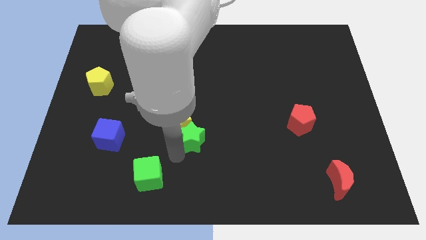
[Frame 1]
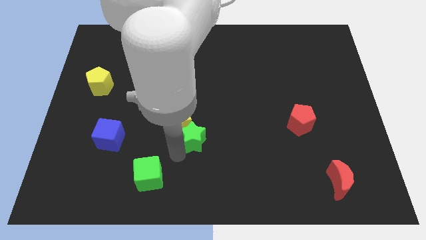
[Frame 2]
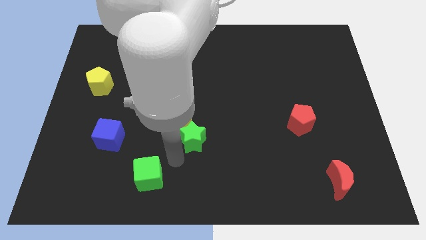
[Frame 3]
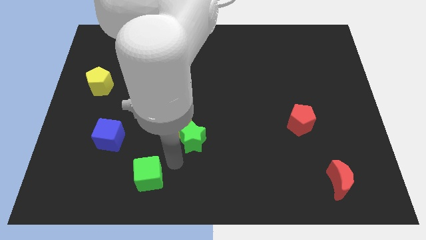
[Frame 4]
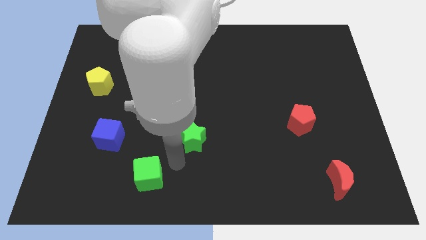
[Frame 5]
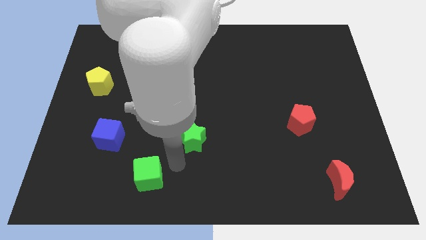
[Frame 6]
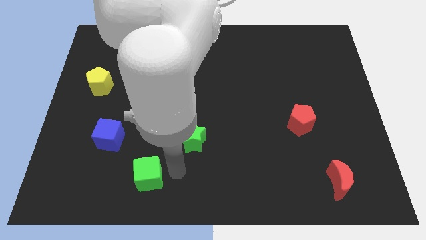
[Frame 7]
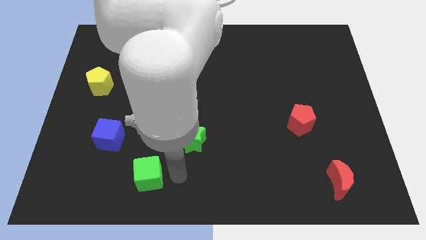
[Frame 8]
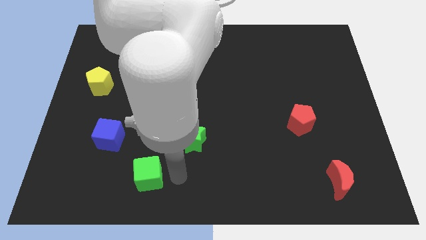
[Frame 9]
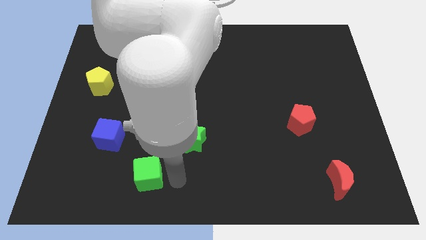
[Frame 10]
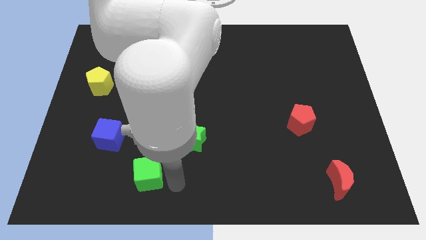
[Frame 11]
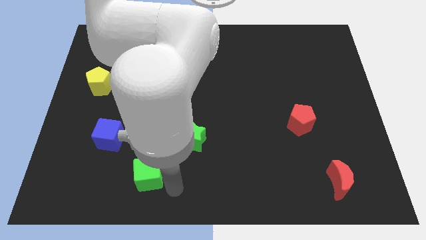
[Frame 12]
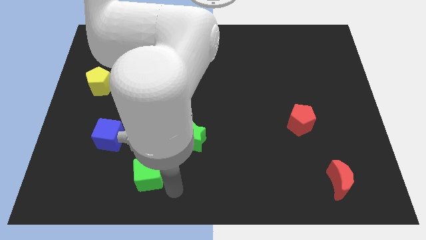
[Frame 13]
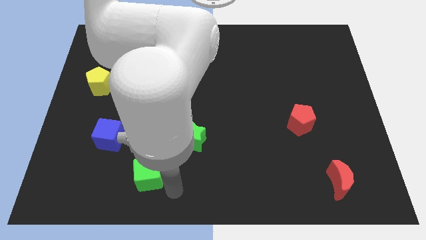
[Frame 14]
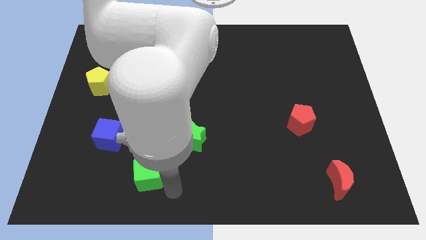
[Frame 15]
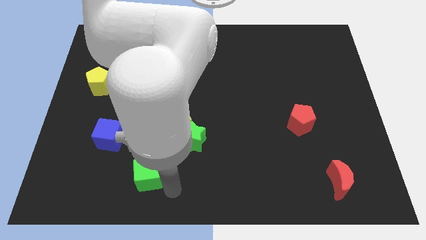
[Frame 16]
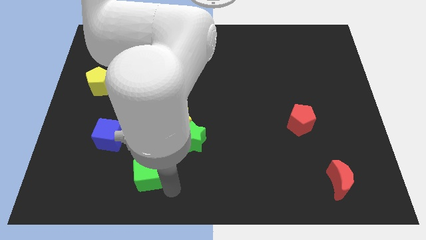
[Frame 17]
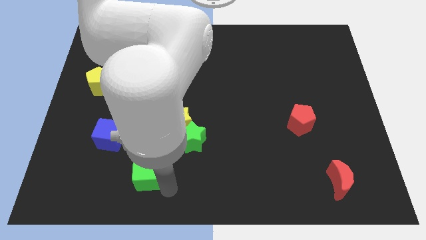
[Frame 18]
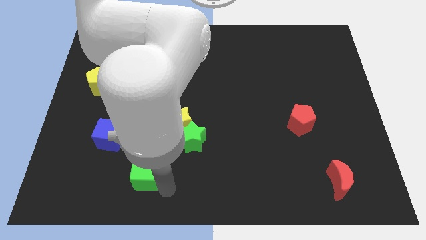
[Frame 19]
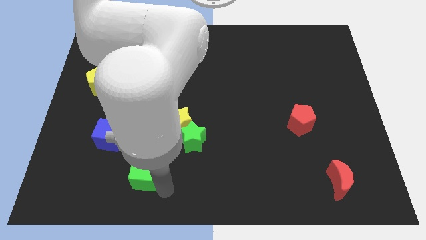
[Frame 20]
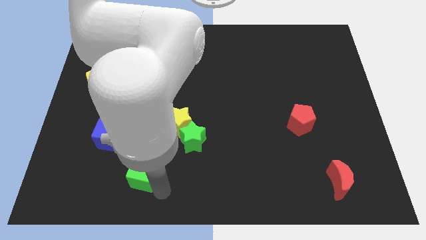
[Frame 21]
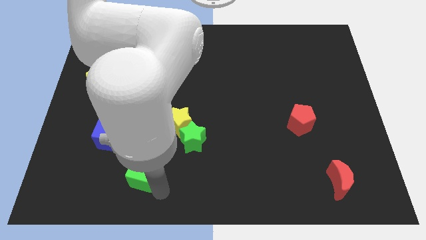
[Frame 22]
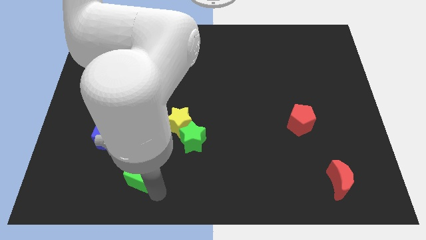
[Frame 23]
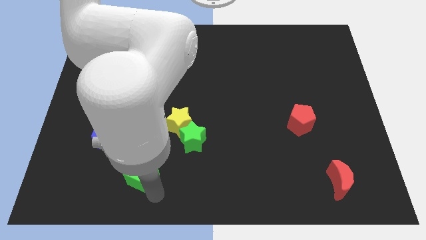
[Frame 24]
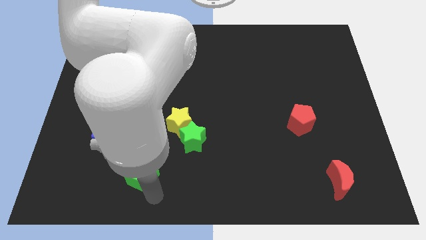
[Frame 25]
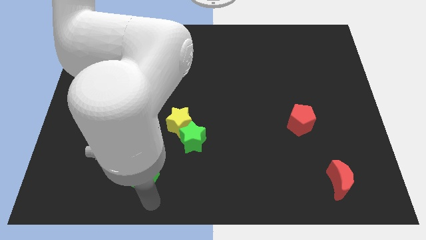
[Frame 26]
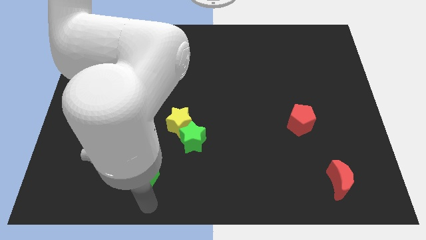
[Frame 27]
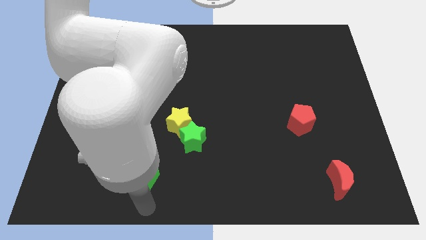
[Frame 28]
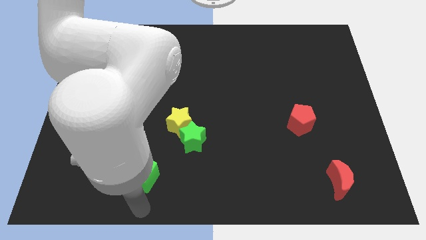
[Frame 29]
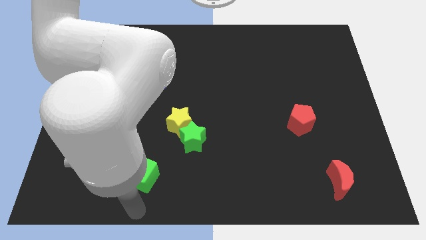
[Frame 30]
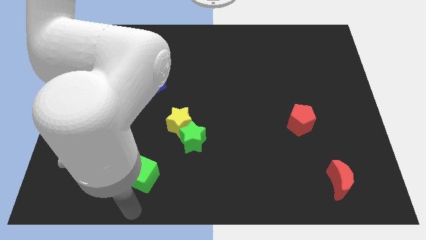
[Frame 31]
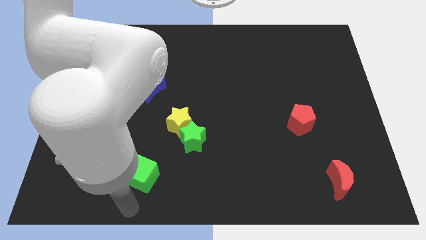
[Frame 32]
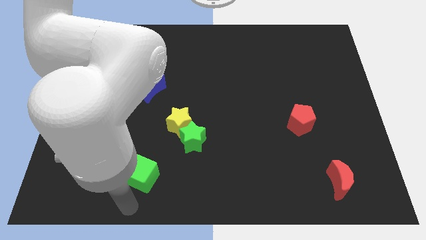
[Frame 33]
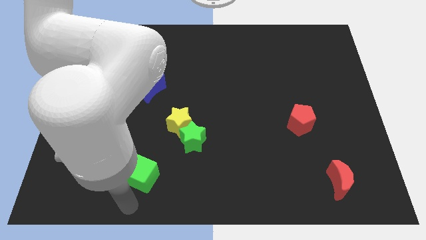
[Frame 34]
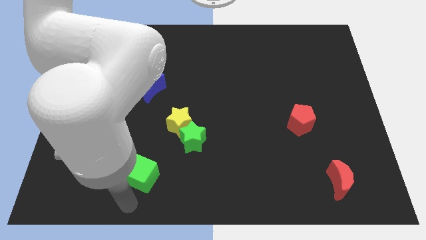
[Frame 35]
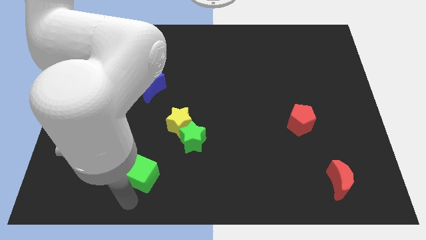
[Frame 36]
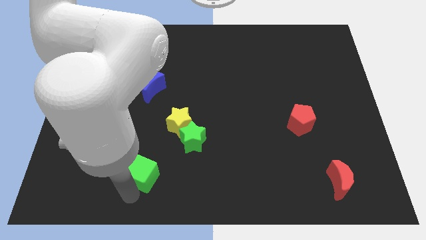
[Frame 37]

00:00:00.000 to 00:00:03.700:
move the arm to the bottom of the green cube

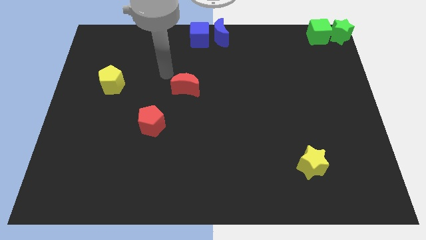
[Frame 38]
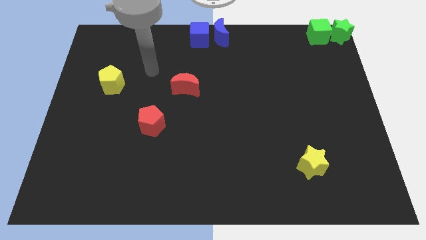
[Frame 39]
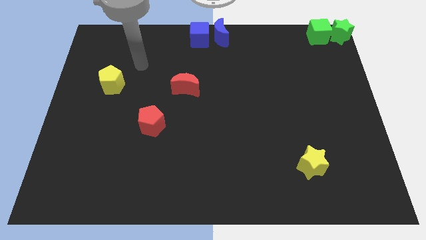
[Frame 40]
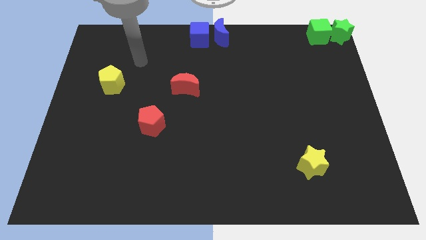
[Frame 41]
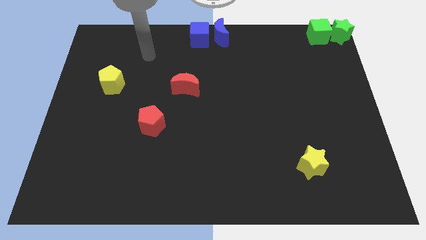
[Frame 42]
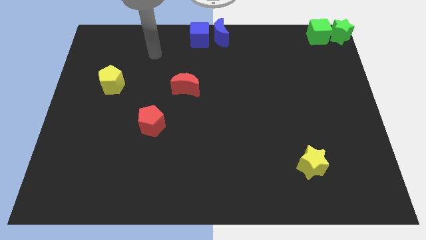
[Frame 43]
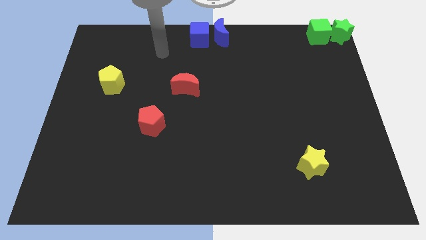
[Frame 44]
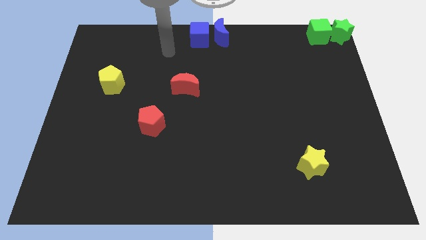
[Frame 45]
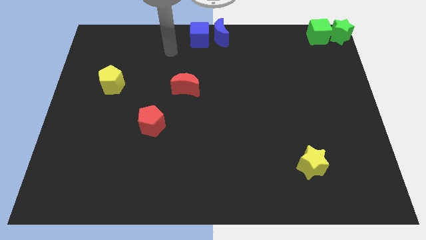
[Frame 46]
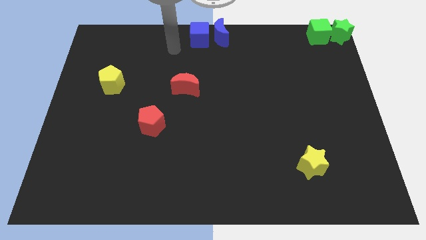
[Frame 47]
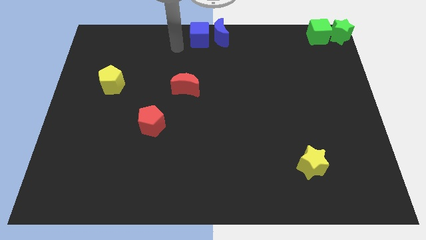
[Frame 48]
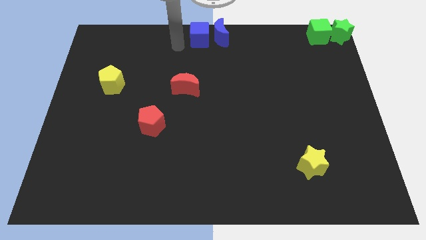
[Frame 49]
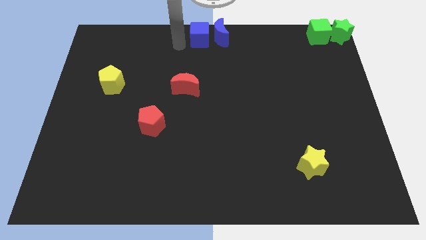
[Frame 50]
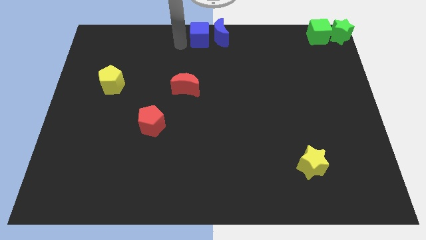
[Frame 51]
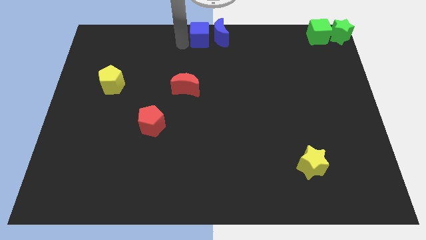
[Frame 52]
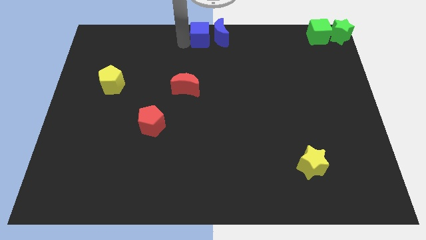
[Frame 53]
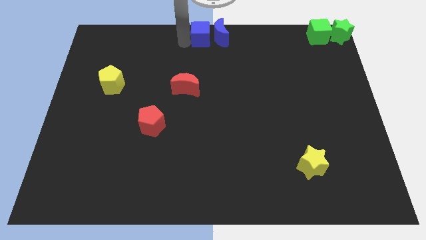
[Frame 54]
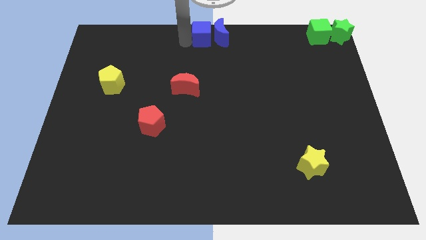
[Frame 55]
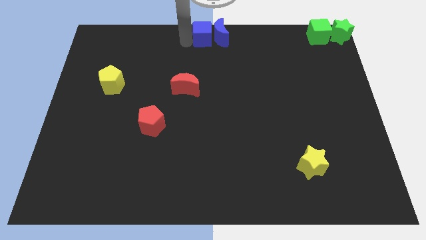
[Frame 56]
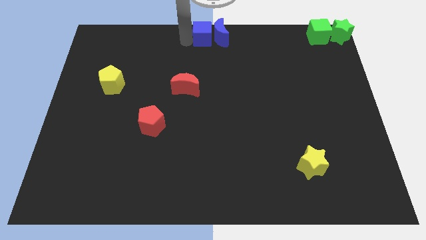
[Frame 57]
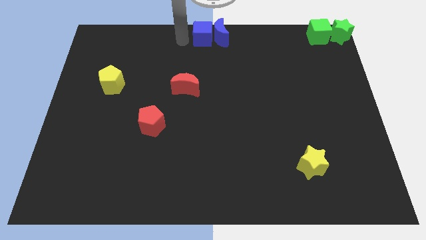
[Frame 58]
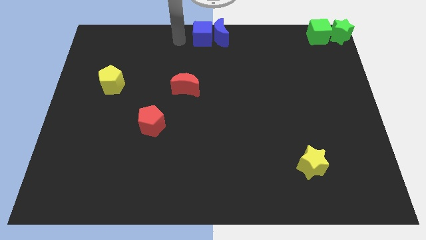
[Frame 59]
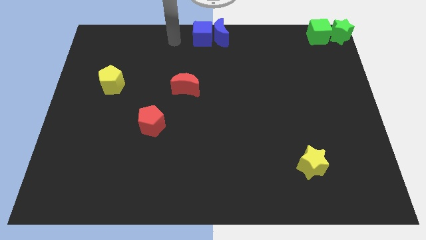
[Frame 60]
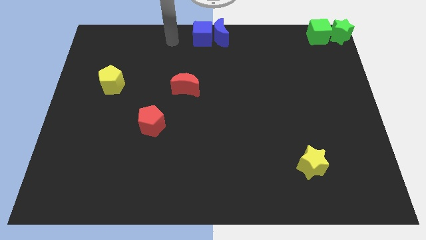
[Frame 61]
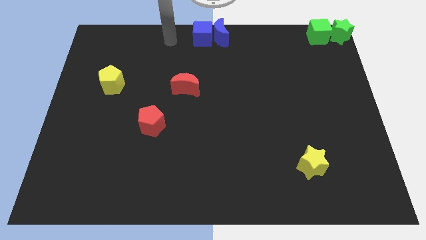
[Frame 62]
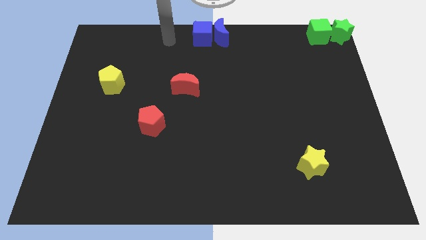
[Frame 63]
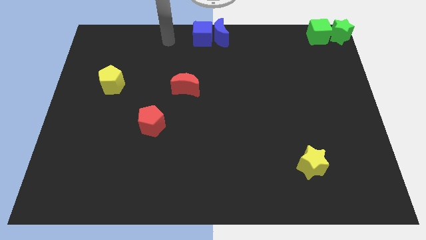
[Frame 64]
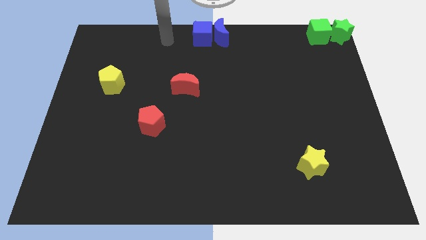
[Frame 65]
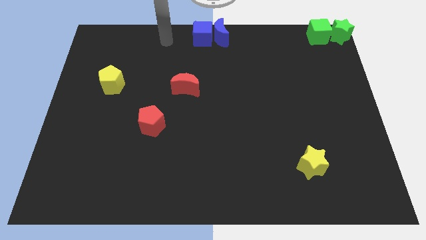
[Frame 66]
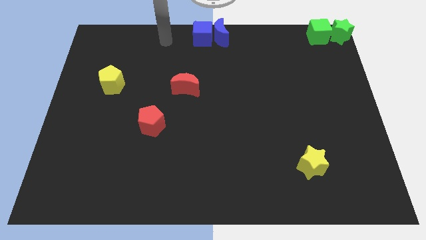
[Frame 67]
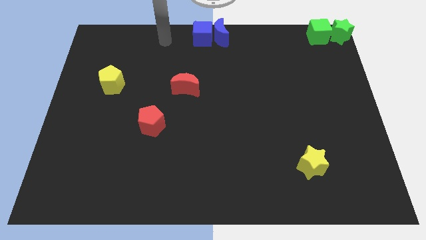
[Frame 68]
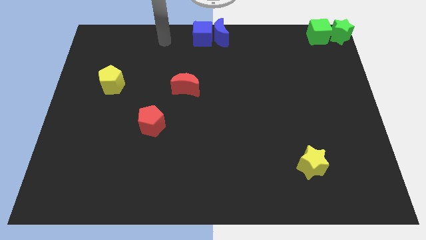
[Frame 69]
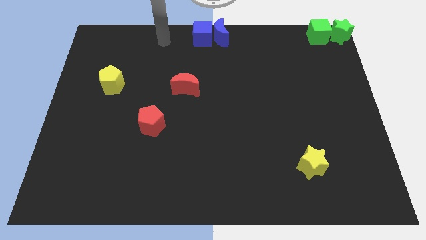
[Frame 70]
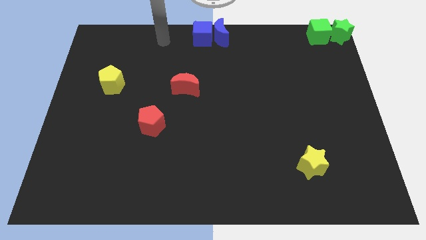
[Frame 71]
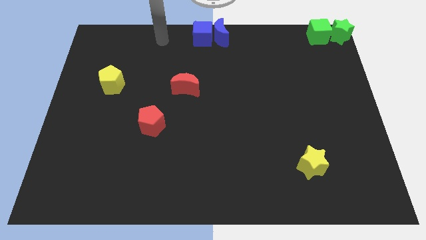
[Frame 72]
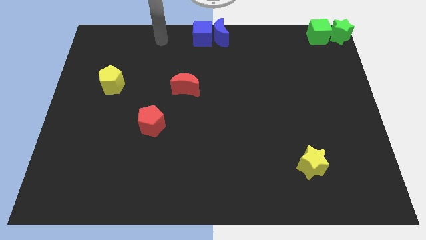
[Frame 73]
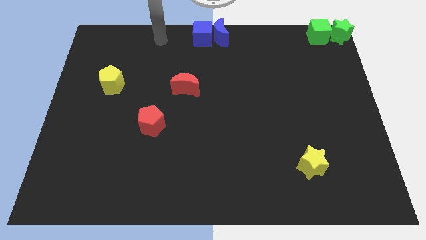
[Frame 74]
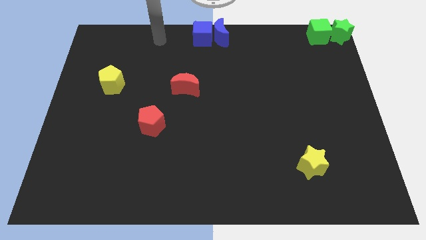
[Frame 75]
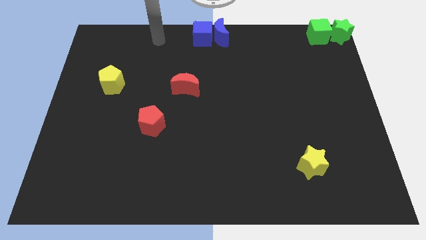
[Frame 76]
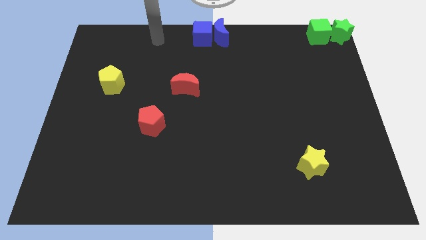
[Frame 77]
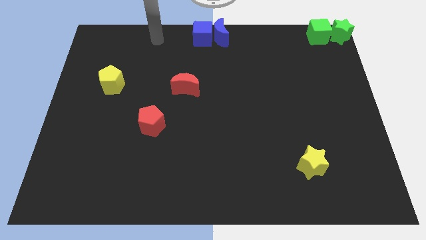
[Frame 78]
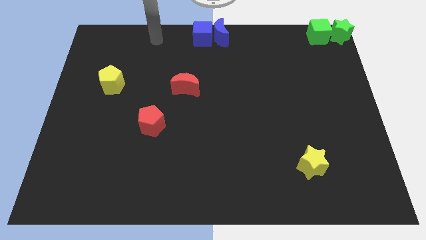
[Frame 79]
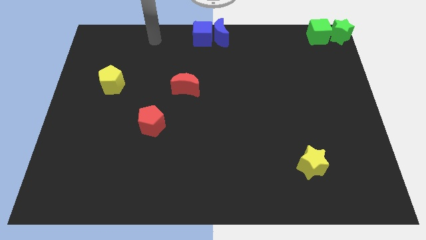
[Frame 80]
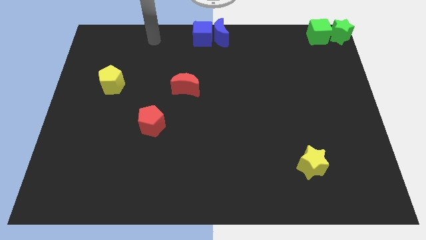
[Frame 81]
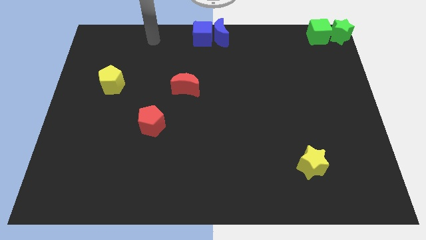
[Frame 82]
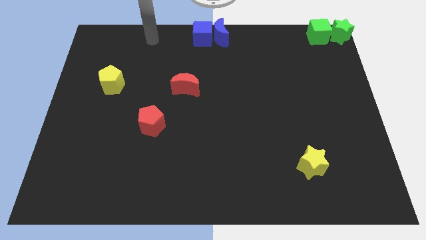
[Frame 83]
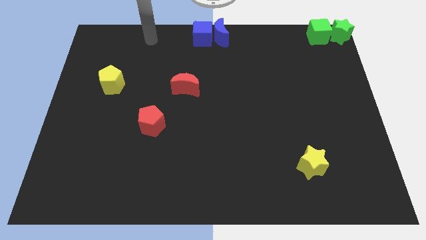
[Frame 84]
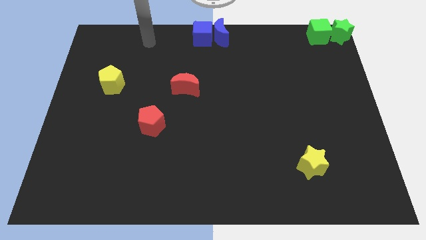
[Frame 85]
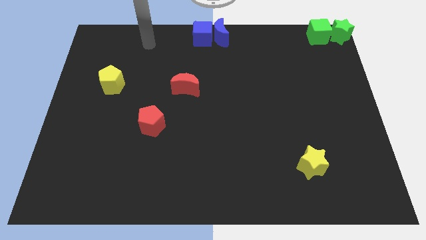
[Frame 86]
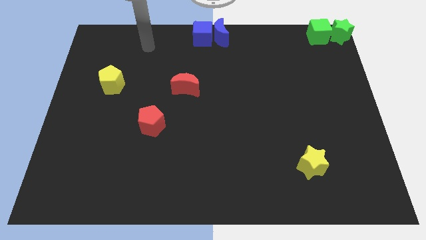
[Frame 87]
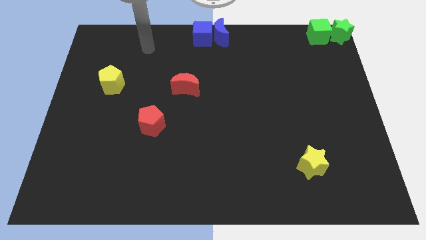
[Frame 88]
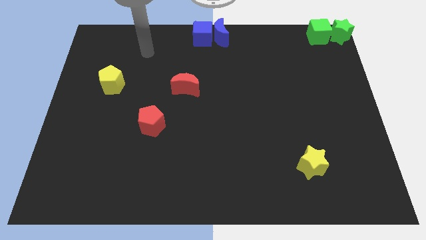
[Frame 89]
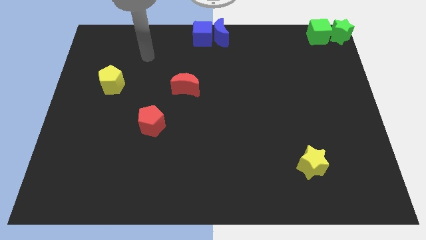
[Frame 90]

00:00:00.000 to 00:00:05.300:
make the blue cube little close to the blue crescent

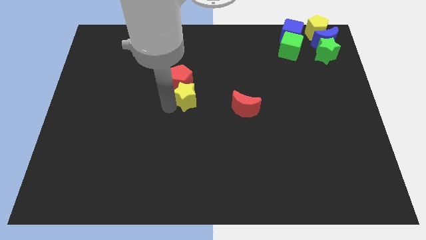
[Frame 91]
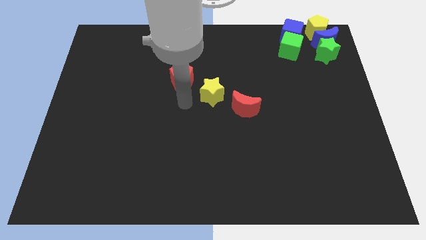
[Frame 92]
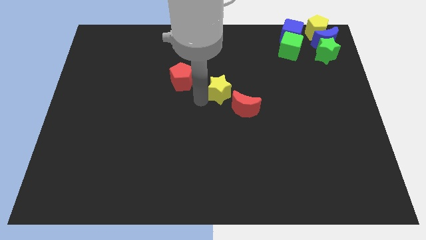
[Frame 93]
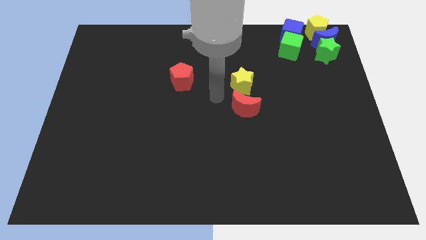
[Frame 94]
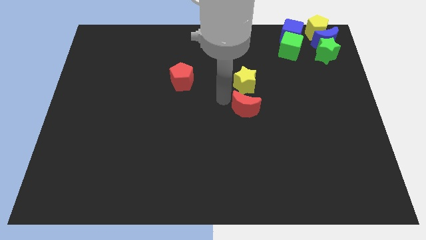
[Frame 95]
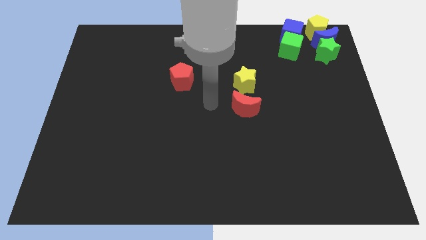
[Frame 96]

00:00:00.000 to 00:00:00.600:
move the yellow star above the red crescent
